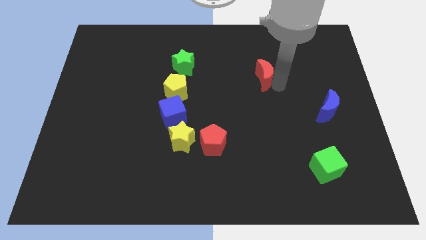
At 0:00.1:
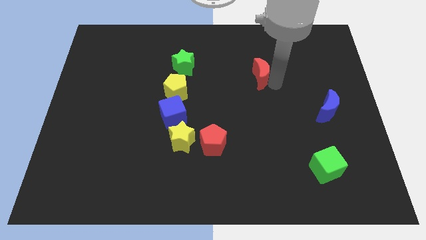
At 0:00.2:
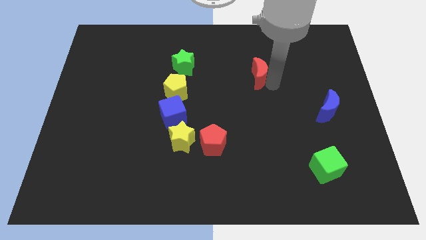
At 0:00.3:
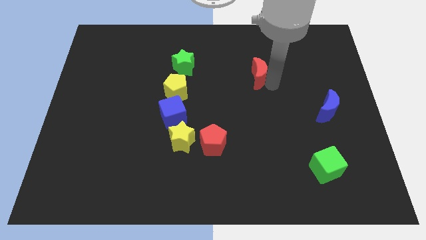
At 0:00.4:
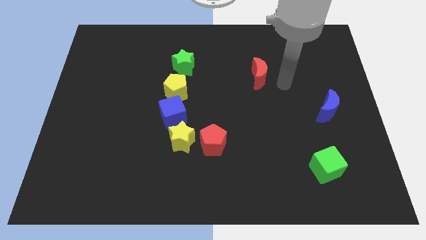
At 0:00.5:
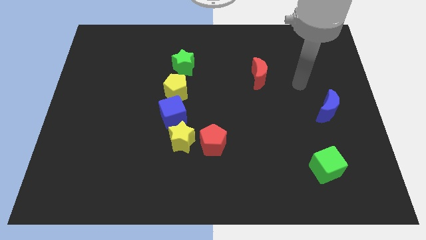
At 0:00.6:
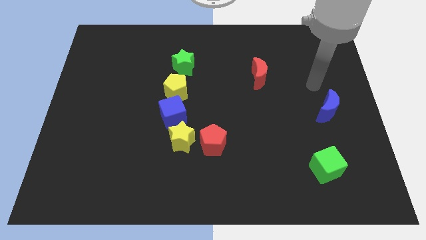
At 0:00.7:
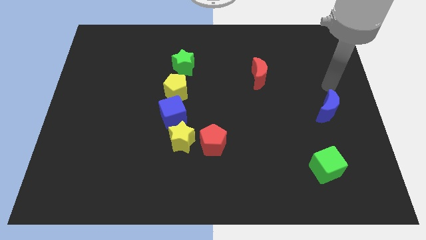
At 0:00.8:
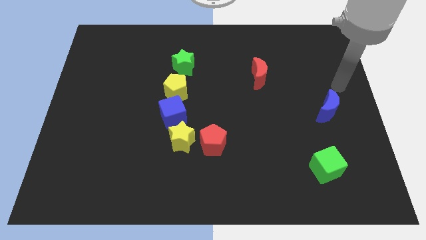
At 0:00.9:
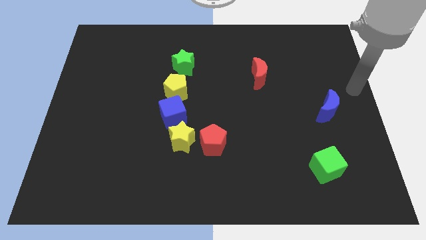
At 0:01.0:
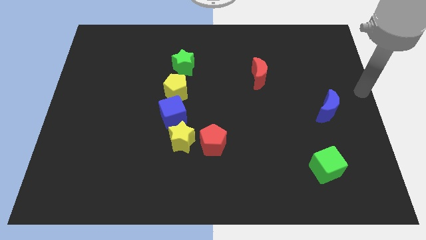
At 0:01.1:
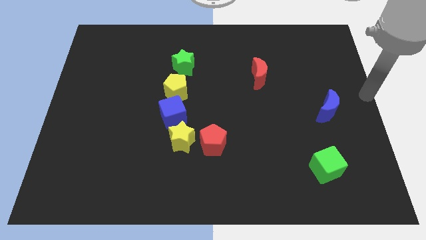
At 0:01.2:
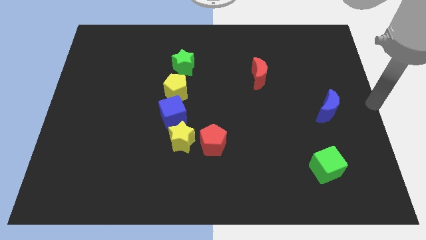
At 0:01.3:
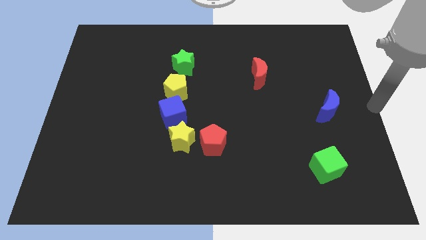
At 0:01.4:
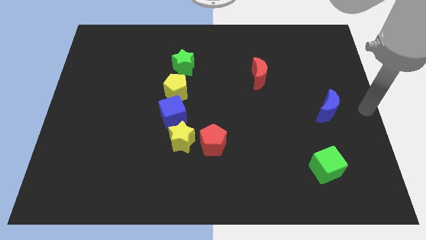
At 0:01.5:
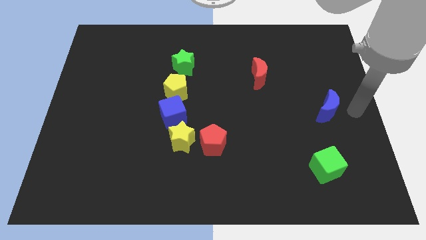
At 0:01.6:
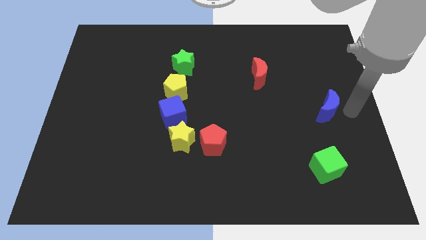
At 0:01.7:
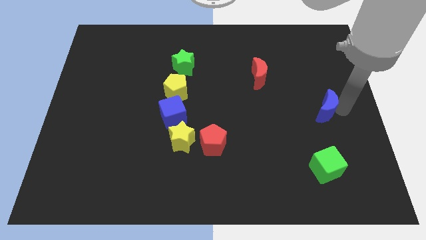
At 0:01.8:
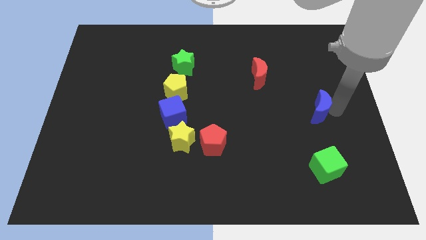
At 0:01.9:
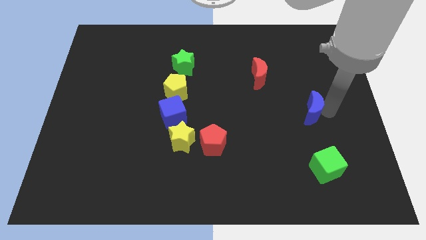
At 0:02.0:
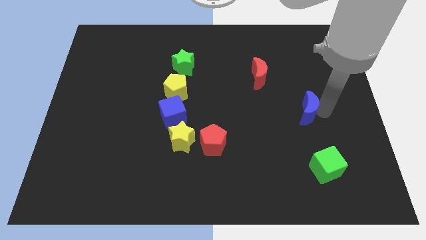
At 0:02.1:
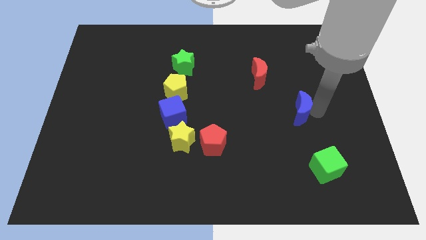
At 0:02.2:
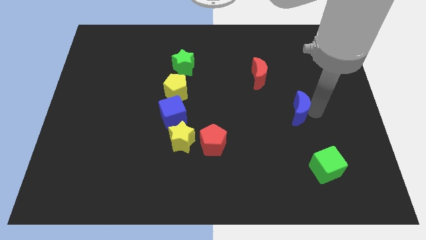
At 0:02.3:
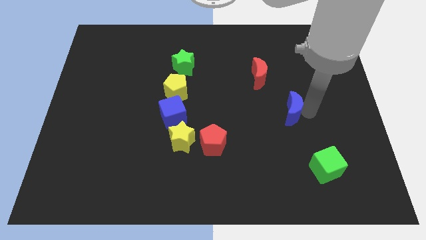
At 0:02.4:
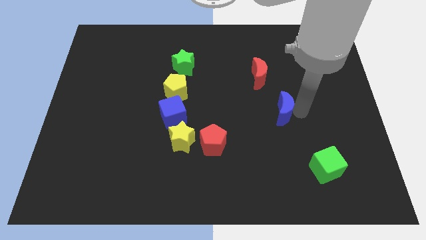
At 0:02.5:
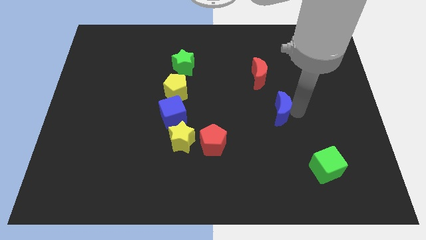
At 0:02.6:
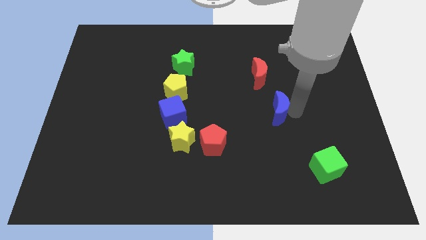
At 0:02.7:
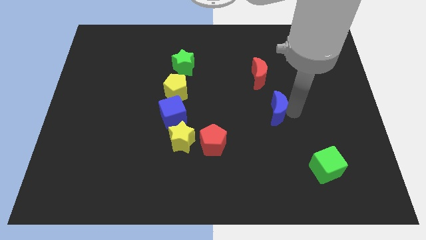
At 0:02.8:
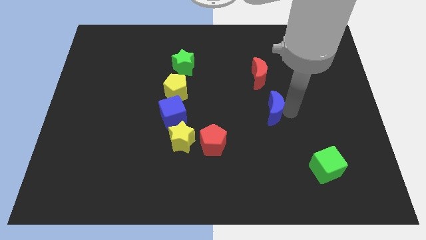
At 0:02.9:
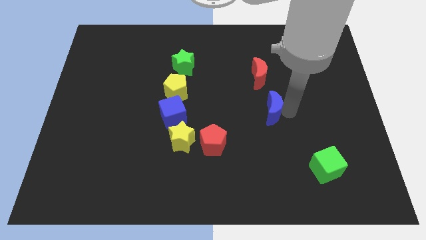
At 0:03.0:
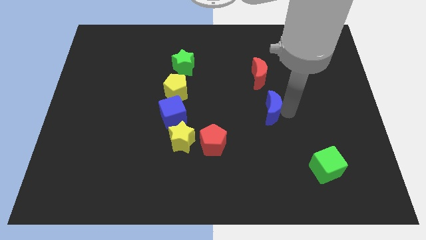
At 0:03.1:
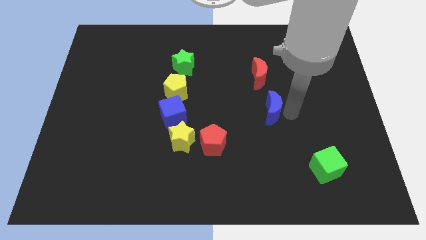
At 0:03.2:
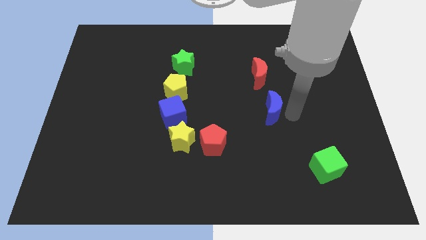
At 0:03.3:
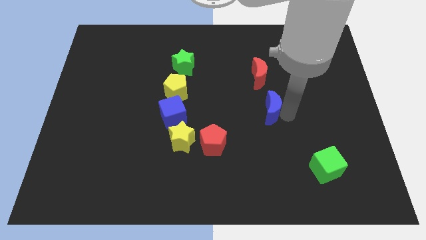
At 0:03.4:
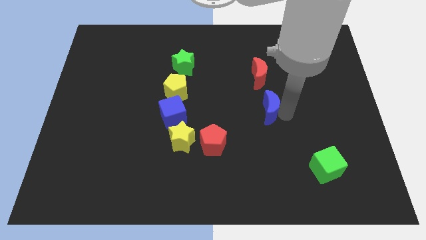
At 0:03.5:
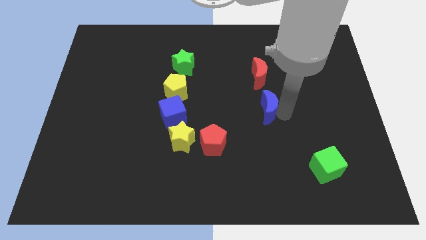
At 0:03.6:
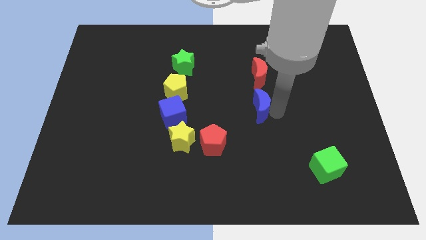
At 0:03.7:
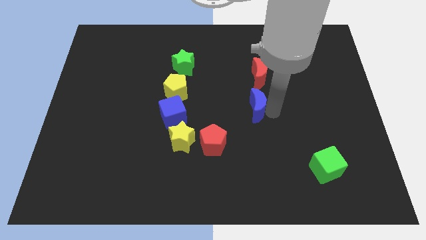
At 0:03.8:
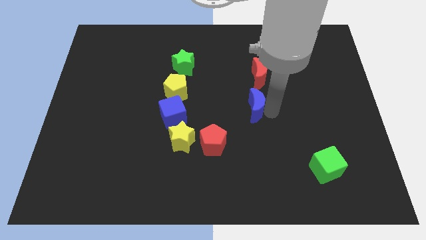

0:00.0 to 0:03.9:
place the blue moon below the red crescent

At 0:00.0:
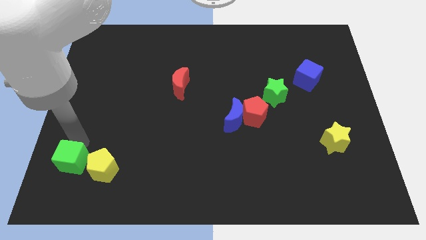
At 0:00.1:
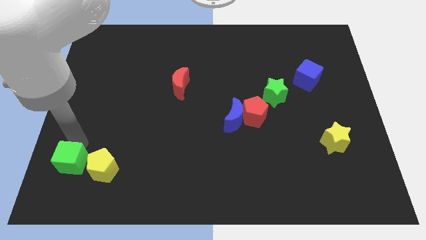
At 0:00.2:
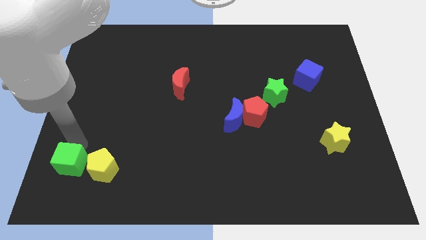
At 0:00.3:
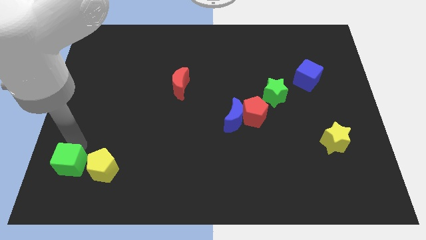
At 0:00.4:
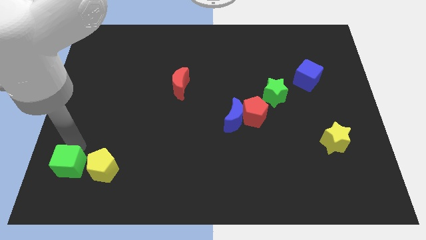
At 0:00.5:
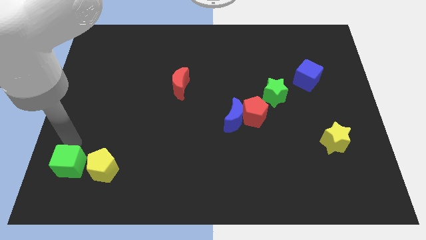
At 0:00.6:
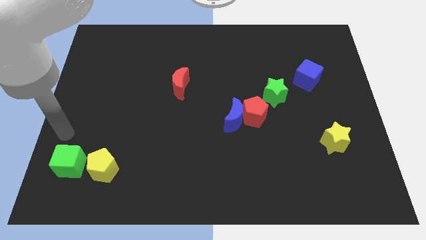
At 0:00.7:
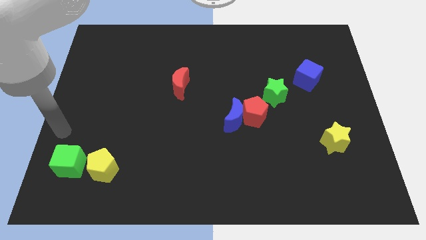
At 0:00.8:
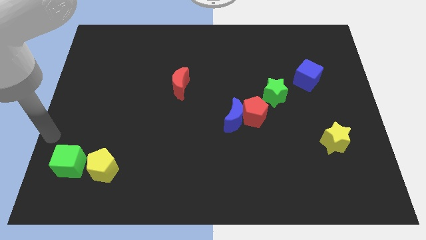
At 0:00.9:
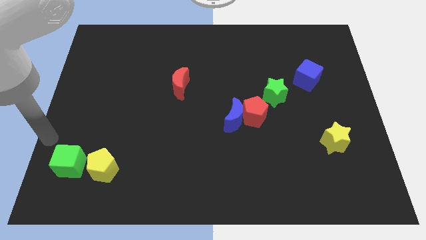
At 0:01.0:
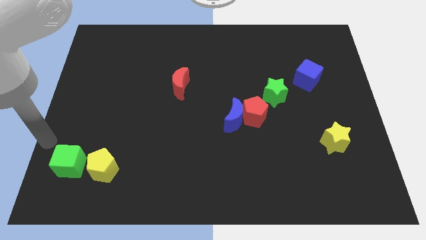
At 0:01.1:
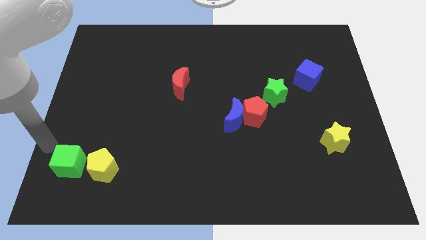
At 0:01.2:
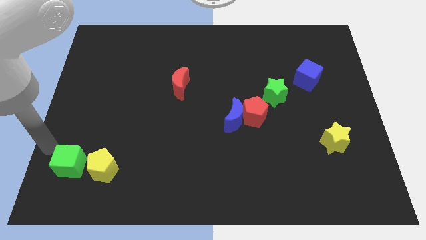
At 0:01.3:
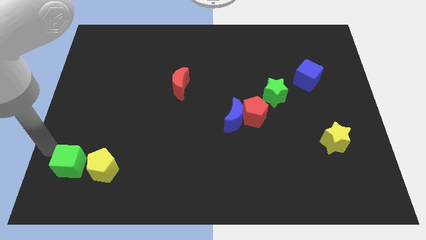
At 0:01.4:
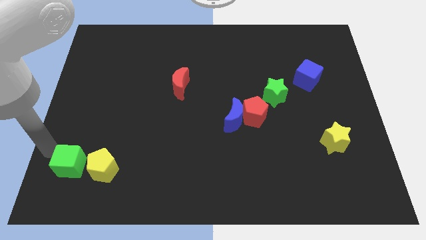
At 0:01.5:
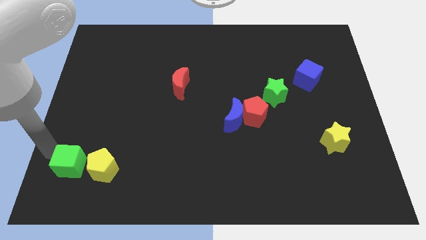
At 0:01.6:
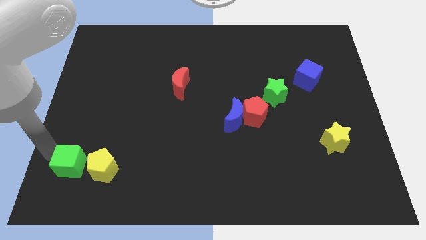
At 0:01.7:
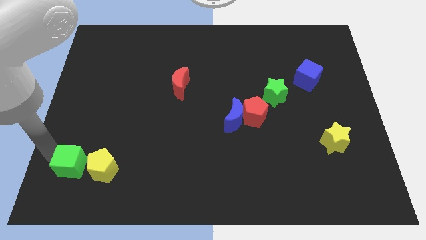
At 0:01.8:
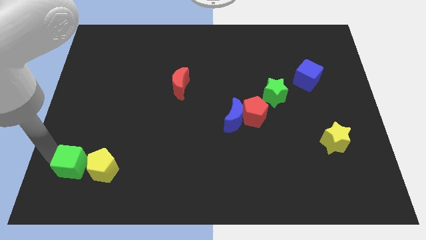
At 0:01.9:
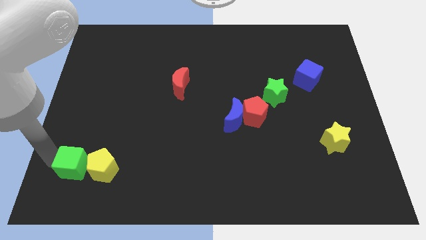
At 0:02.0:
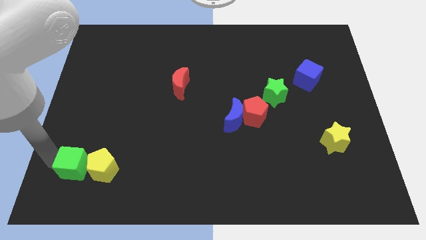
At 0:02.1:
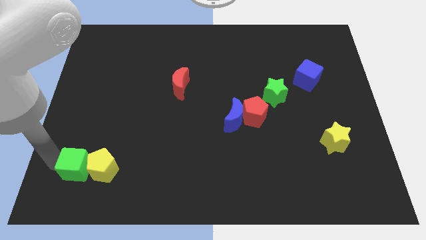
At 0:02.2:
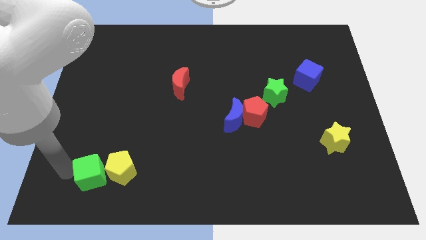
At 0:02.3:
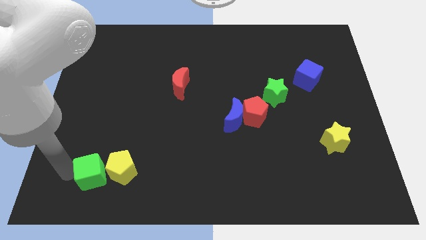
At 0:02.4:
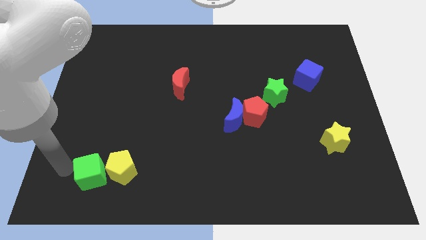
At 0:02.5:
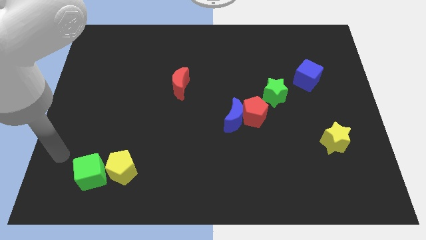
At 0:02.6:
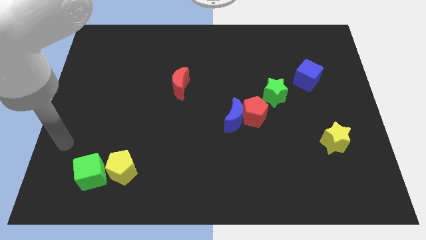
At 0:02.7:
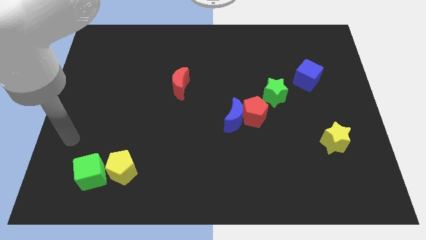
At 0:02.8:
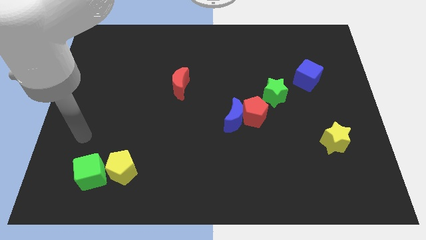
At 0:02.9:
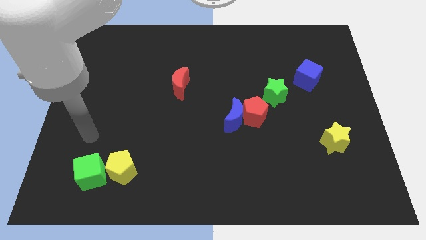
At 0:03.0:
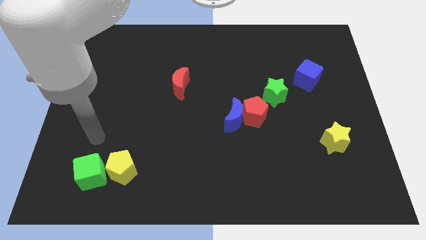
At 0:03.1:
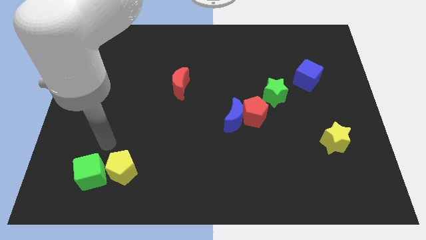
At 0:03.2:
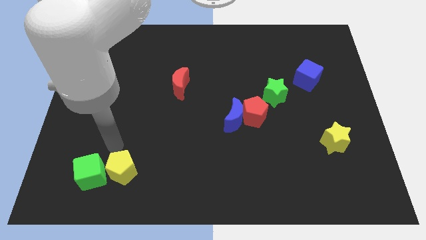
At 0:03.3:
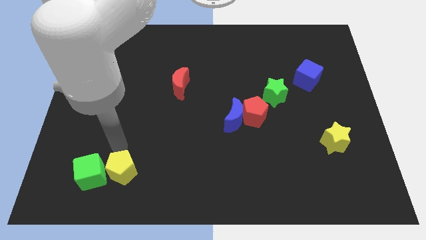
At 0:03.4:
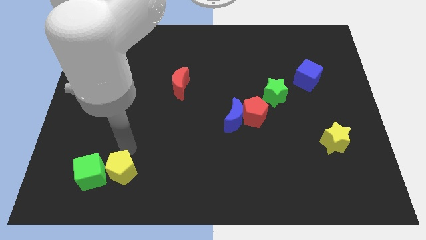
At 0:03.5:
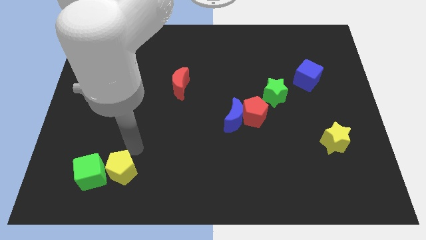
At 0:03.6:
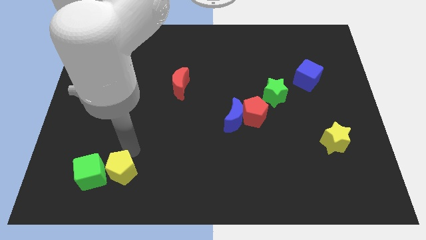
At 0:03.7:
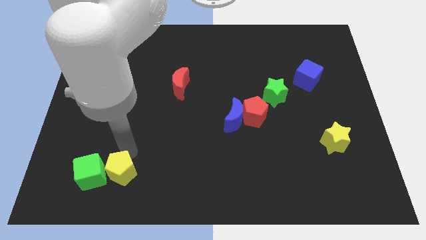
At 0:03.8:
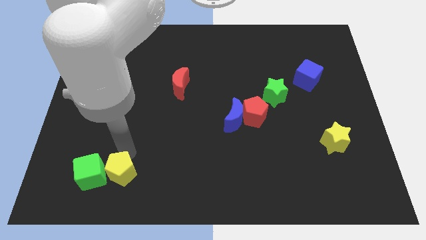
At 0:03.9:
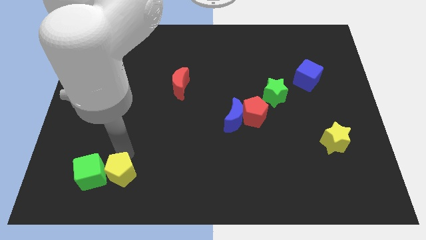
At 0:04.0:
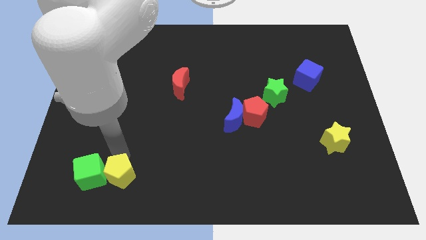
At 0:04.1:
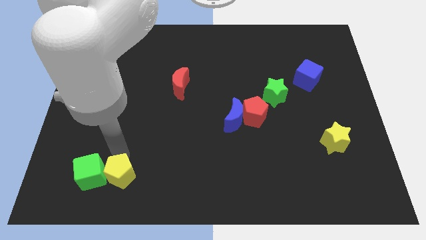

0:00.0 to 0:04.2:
push the green cube into the yellow pentagon

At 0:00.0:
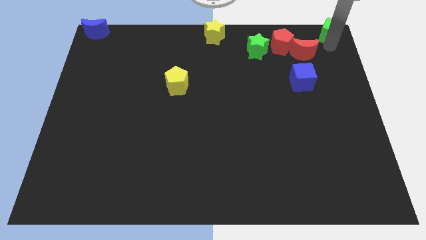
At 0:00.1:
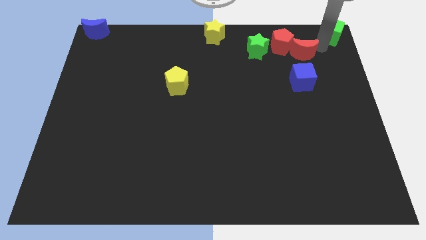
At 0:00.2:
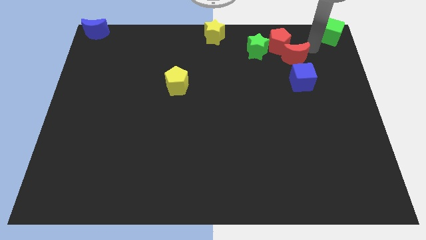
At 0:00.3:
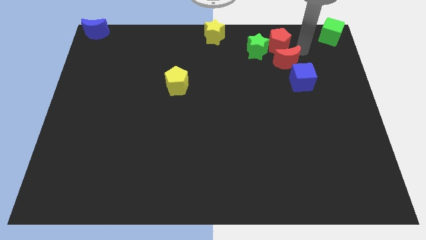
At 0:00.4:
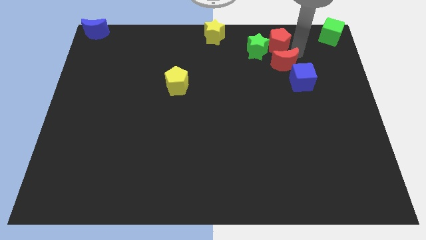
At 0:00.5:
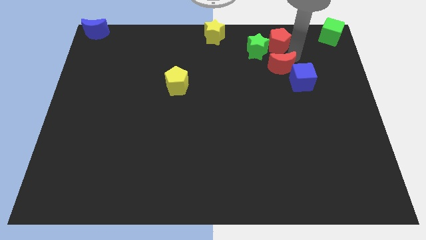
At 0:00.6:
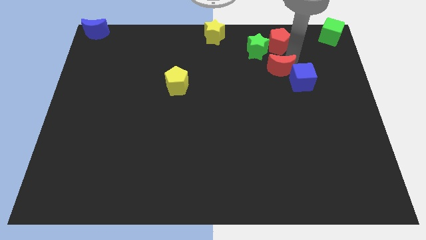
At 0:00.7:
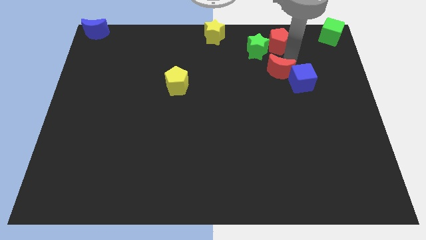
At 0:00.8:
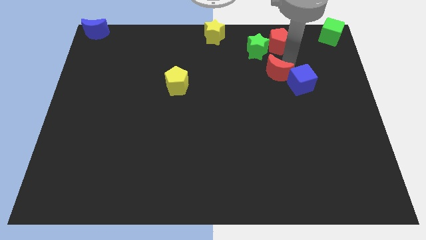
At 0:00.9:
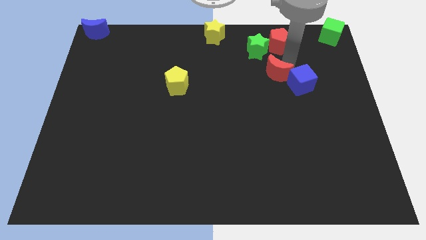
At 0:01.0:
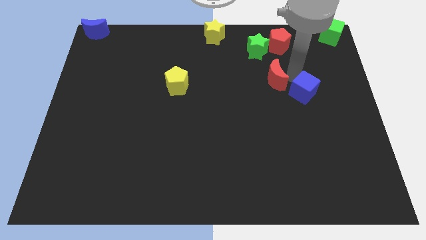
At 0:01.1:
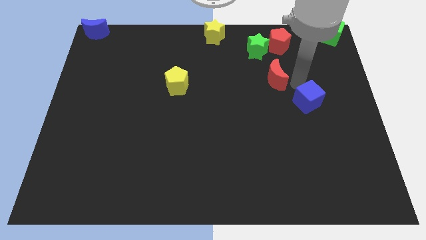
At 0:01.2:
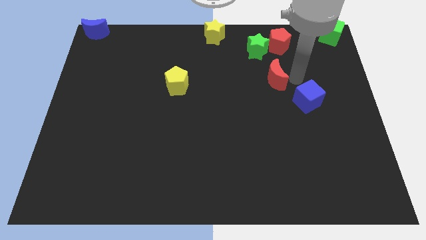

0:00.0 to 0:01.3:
separate the red crescent from the red pentagon
